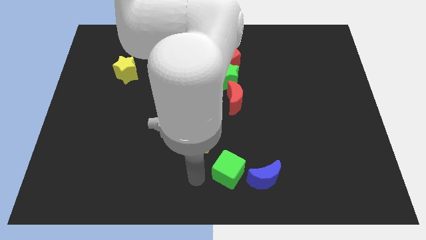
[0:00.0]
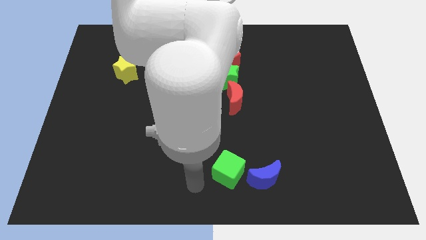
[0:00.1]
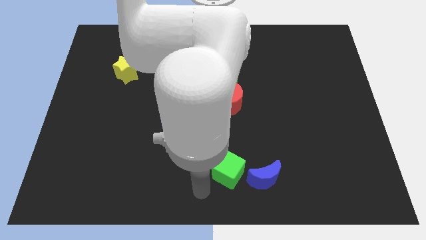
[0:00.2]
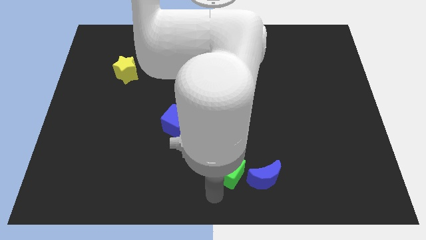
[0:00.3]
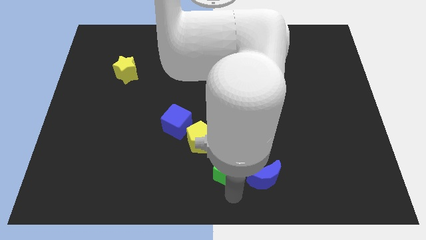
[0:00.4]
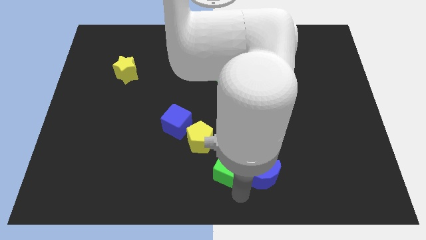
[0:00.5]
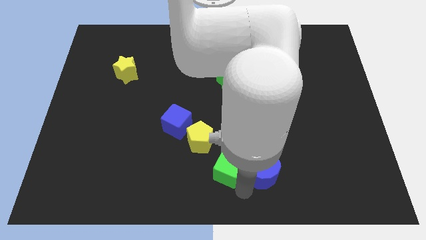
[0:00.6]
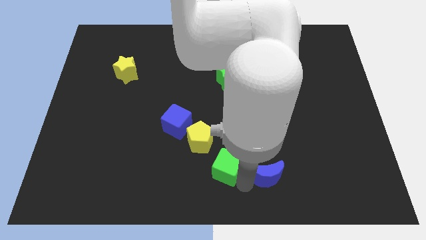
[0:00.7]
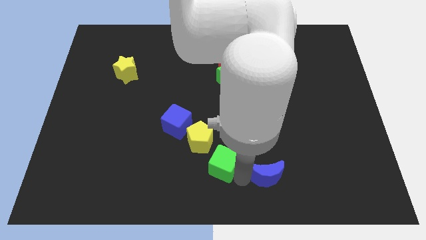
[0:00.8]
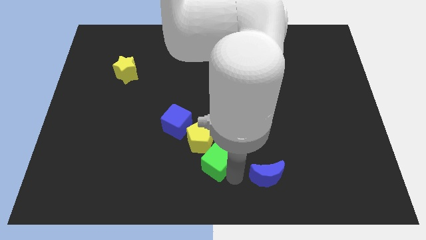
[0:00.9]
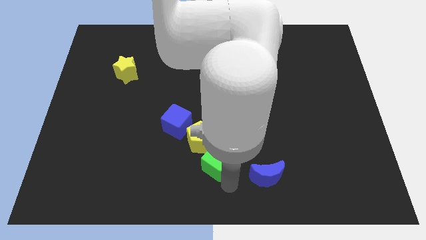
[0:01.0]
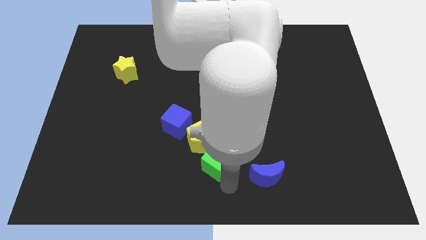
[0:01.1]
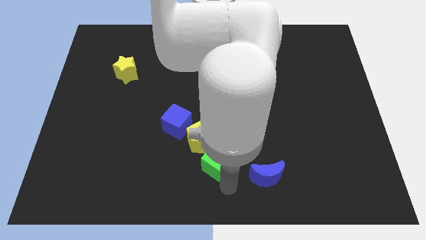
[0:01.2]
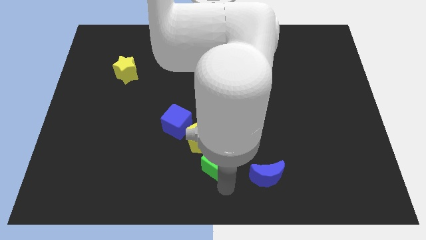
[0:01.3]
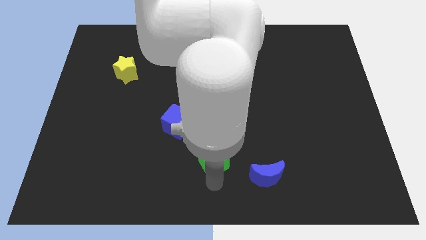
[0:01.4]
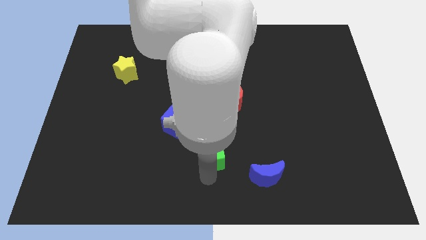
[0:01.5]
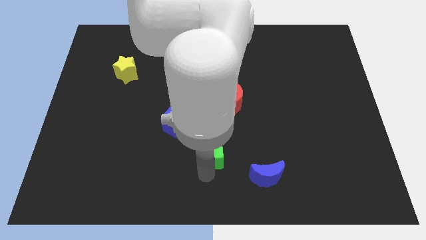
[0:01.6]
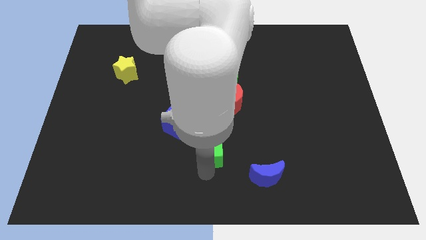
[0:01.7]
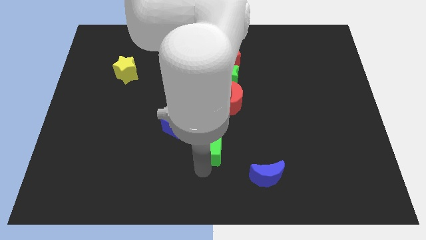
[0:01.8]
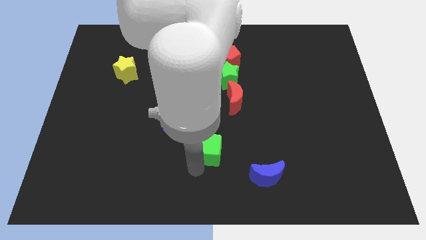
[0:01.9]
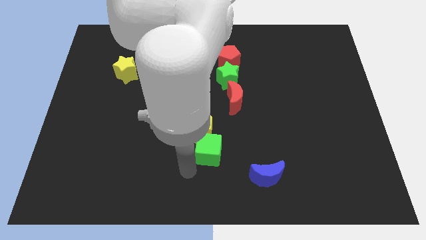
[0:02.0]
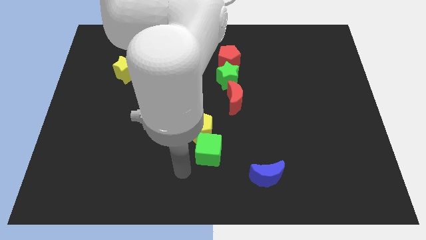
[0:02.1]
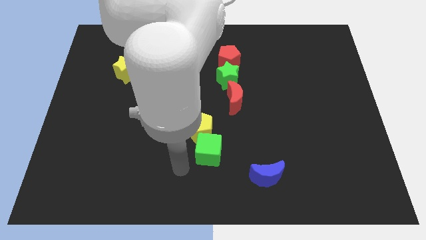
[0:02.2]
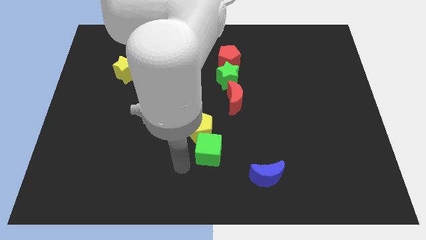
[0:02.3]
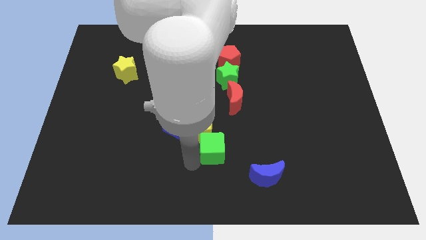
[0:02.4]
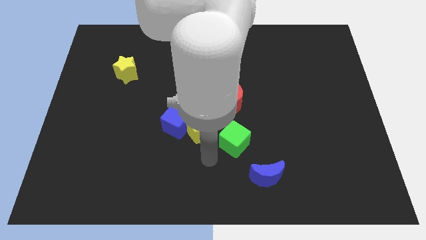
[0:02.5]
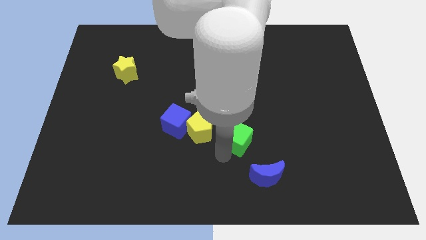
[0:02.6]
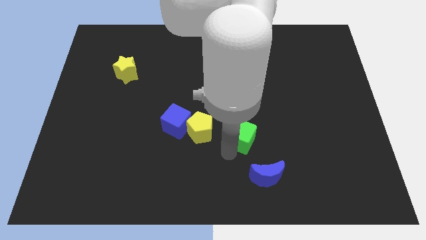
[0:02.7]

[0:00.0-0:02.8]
push green cube below red crescent

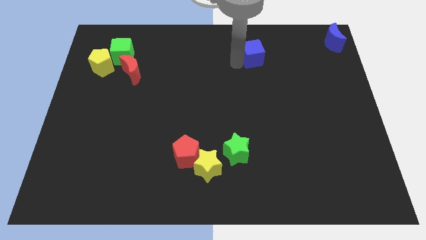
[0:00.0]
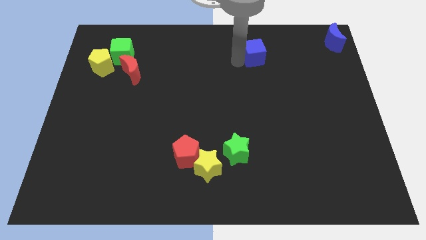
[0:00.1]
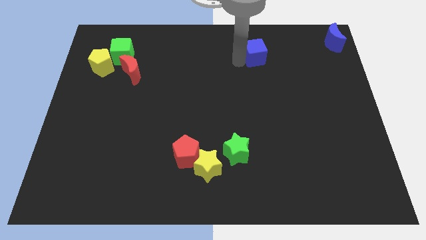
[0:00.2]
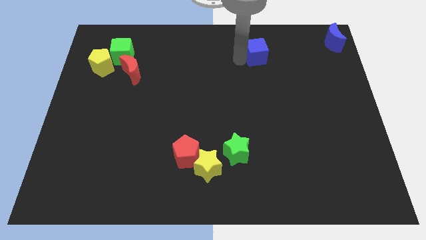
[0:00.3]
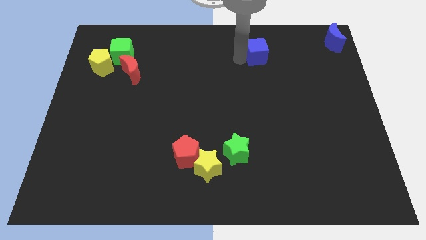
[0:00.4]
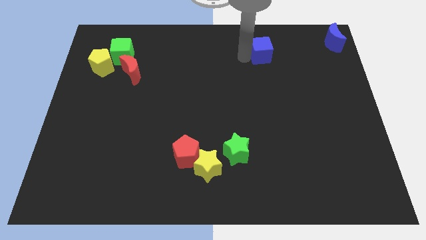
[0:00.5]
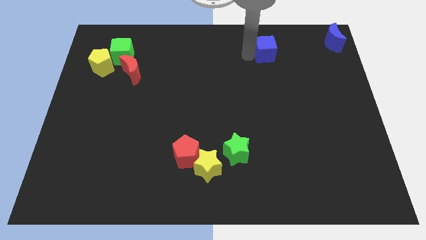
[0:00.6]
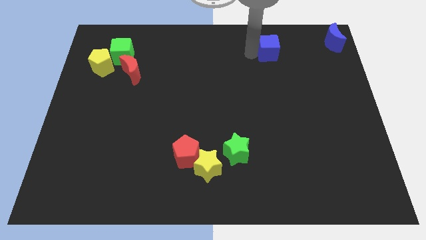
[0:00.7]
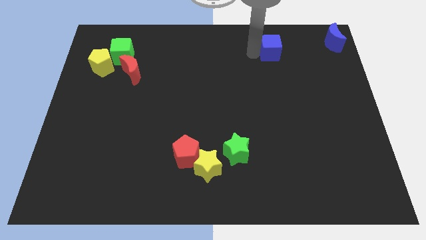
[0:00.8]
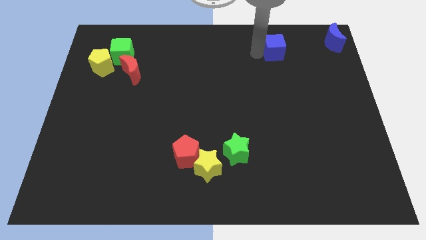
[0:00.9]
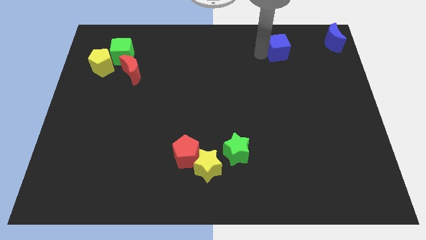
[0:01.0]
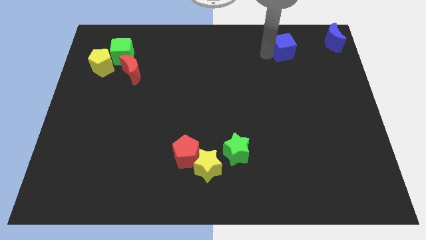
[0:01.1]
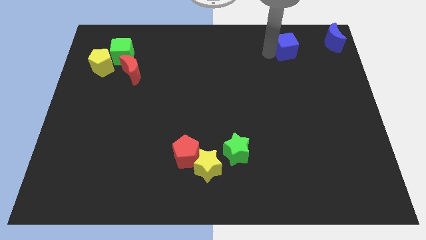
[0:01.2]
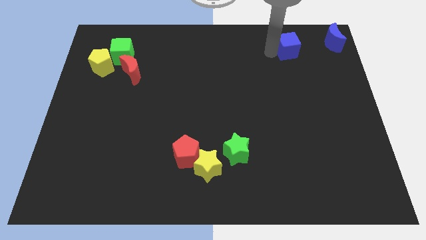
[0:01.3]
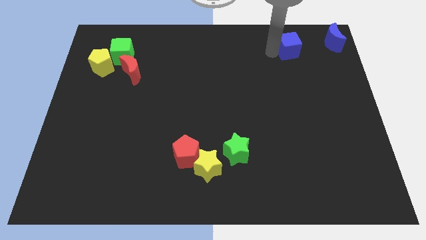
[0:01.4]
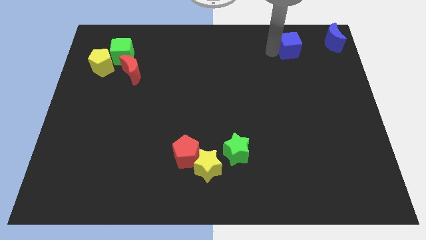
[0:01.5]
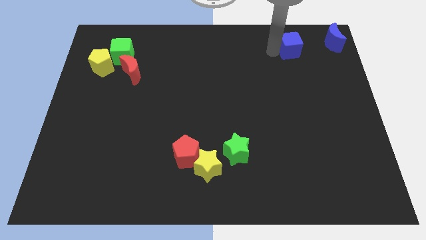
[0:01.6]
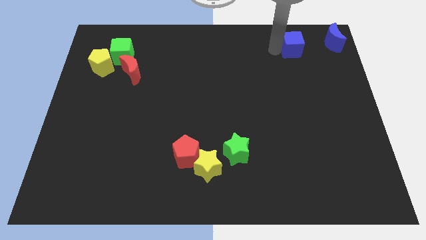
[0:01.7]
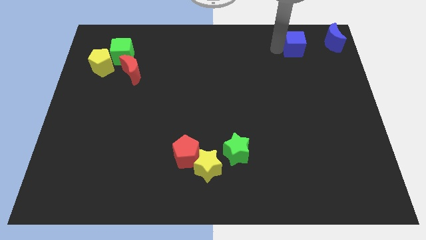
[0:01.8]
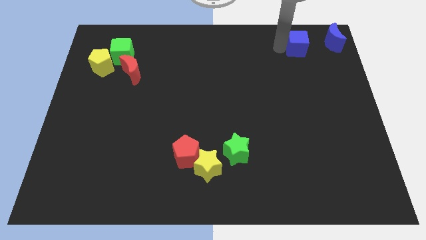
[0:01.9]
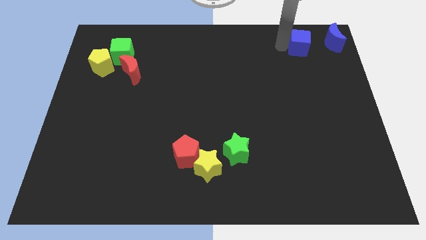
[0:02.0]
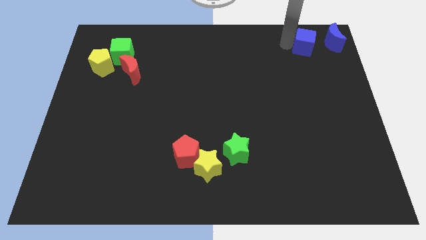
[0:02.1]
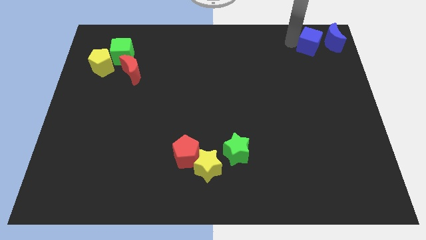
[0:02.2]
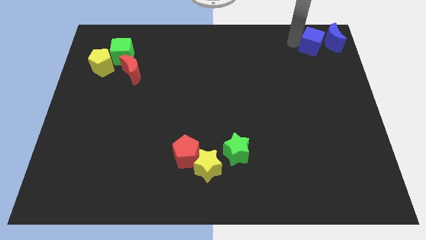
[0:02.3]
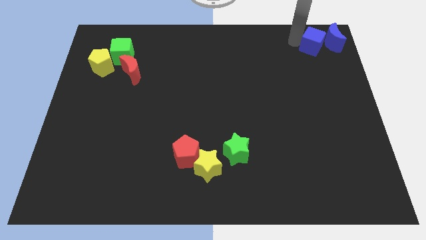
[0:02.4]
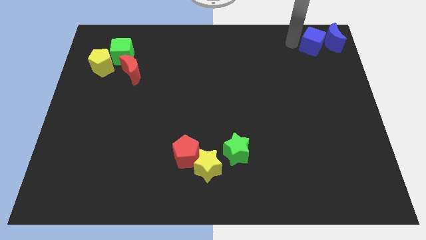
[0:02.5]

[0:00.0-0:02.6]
move the blue cube towards blue crescent

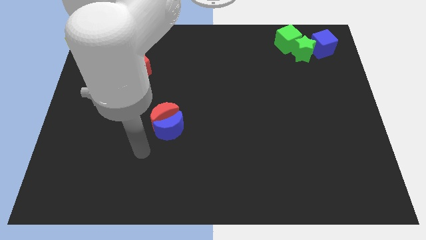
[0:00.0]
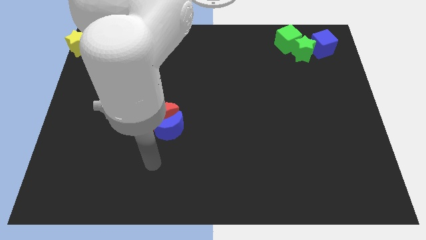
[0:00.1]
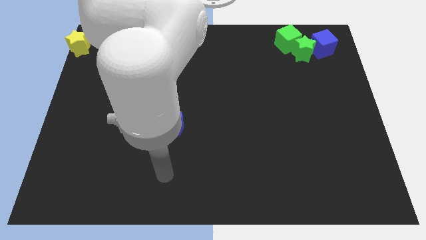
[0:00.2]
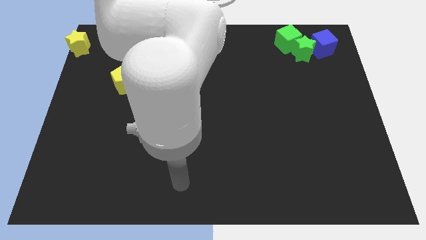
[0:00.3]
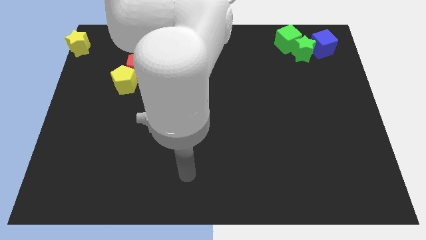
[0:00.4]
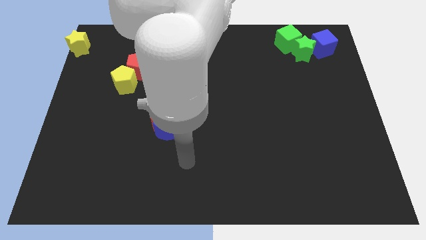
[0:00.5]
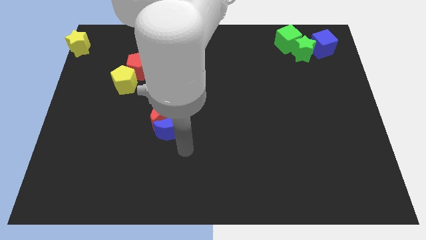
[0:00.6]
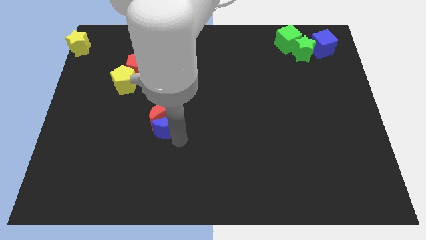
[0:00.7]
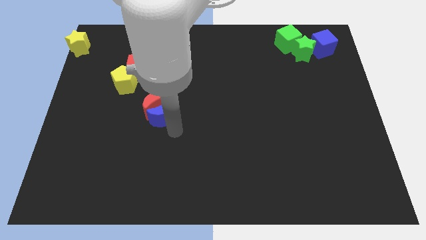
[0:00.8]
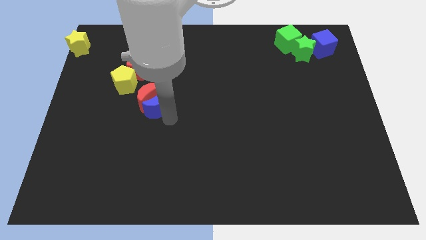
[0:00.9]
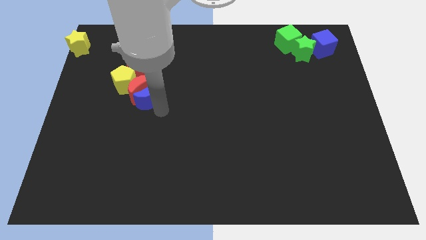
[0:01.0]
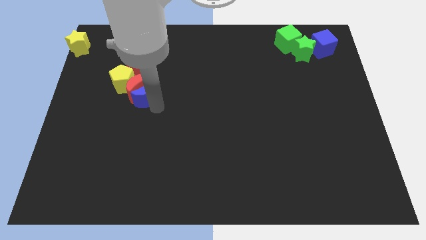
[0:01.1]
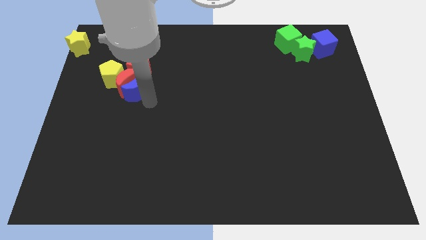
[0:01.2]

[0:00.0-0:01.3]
move the red and blue crescent below the yellow pentagon

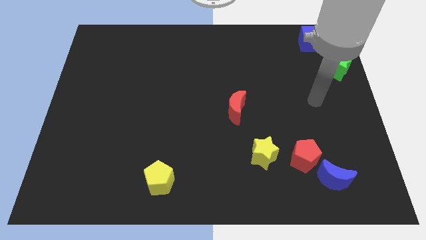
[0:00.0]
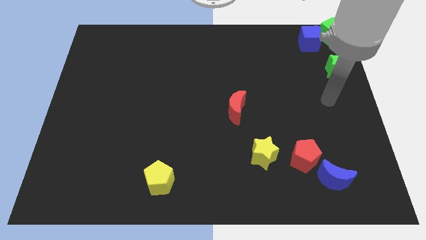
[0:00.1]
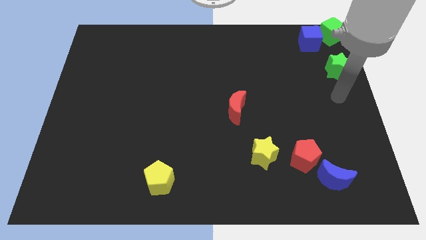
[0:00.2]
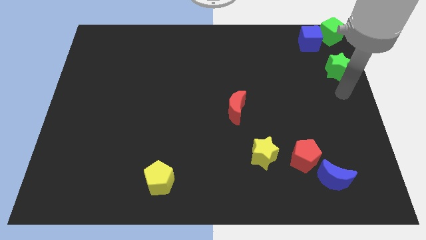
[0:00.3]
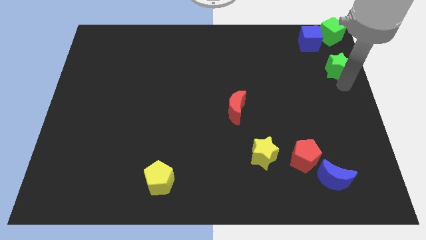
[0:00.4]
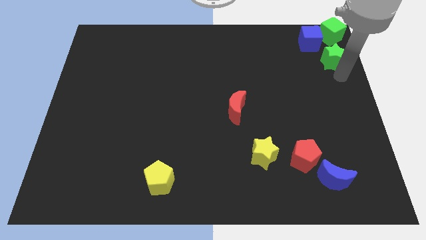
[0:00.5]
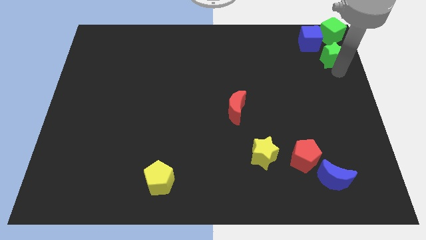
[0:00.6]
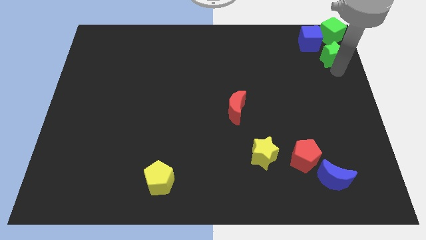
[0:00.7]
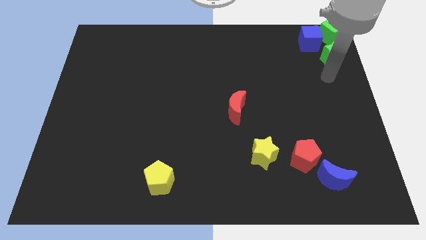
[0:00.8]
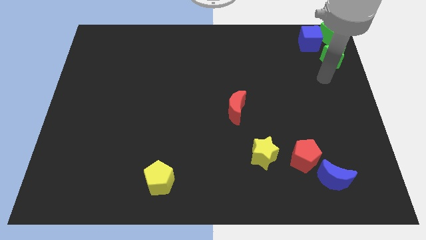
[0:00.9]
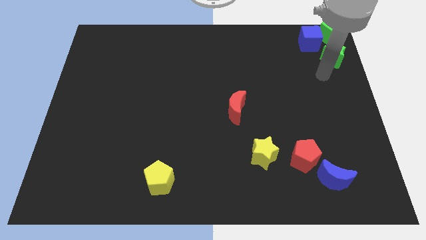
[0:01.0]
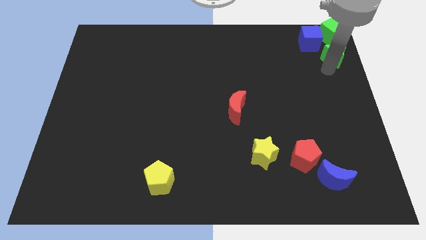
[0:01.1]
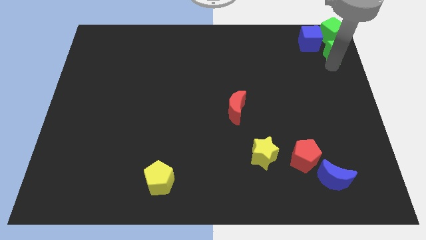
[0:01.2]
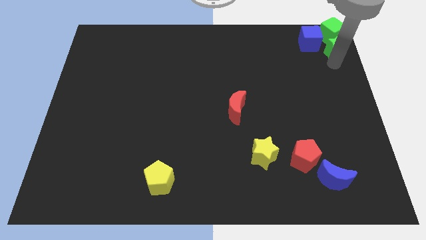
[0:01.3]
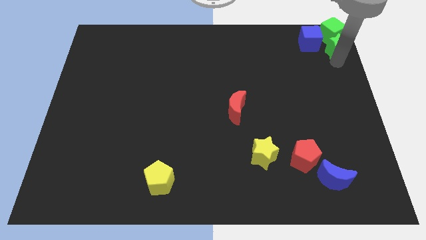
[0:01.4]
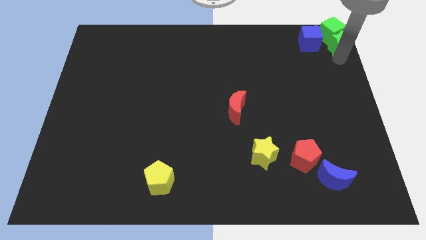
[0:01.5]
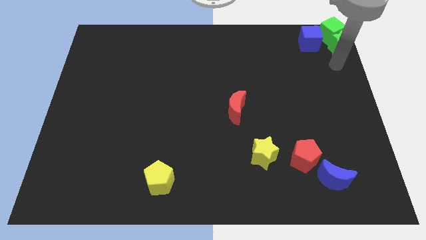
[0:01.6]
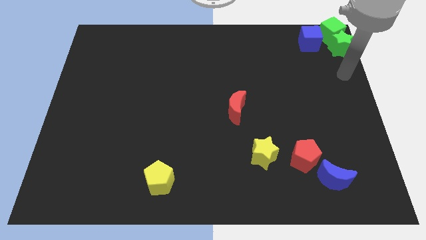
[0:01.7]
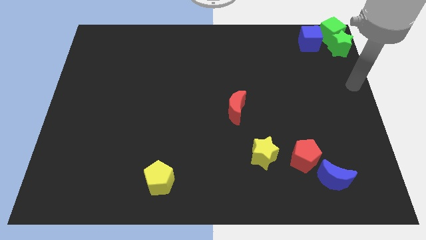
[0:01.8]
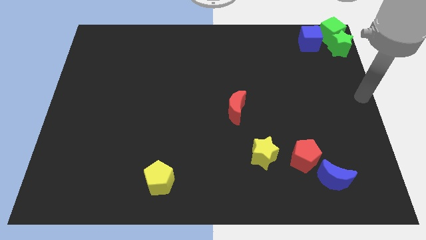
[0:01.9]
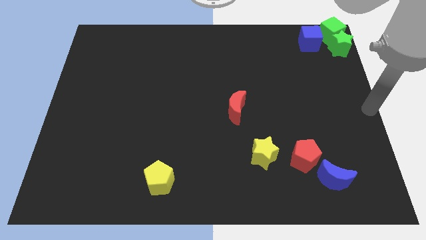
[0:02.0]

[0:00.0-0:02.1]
slide the green star into the green cube

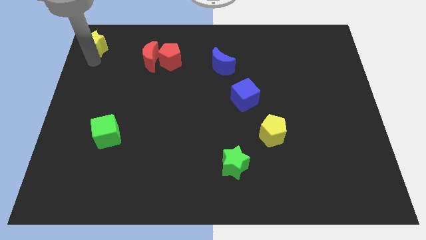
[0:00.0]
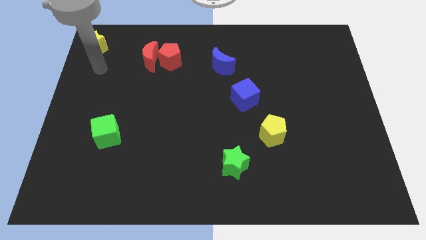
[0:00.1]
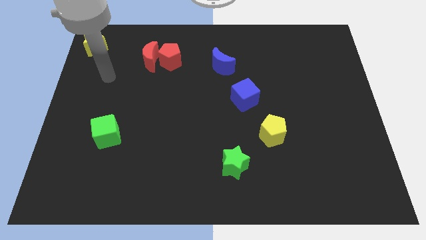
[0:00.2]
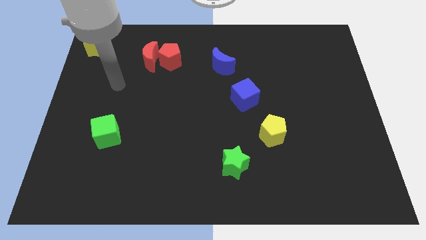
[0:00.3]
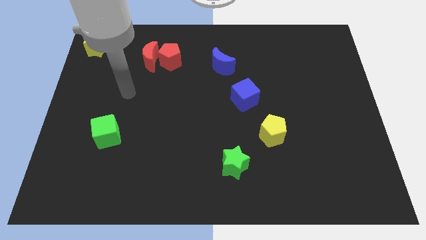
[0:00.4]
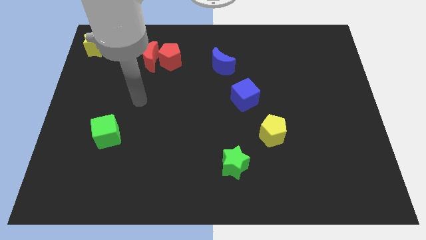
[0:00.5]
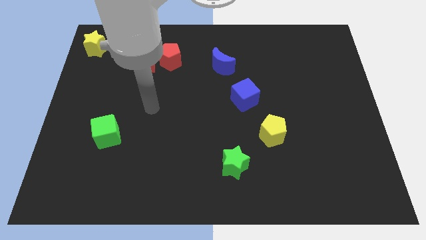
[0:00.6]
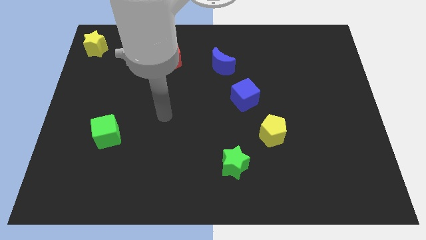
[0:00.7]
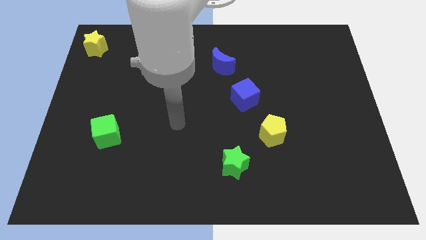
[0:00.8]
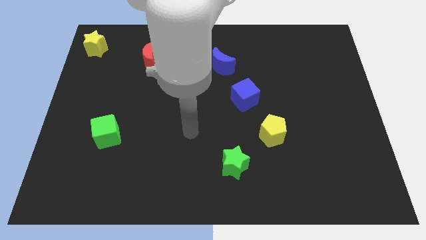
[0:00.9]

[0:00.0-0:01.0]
move your arm away from yellow star
